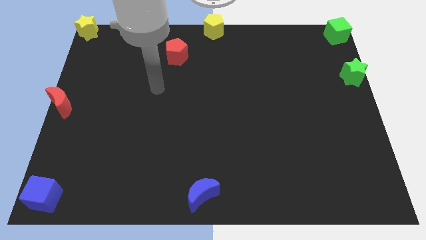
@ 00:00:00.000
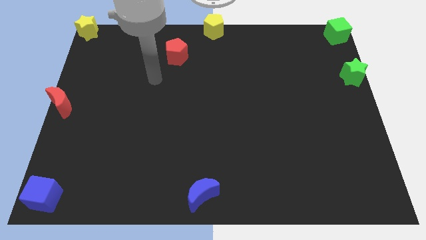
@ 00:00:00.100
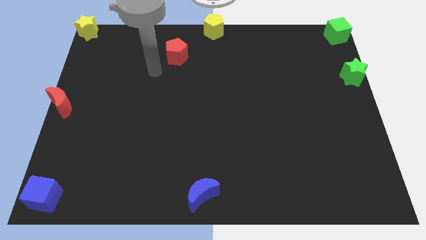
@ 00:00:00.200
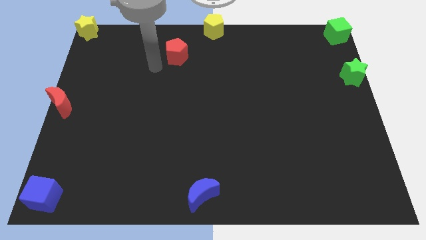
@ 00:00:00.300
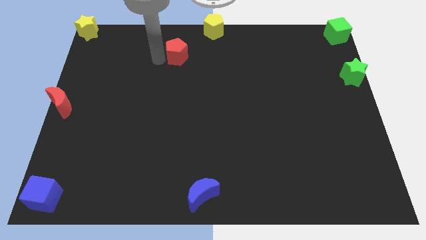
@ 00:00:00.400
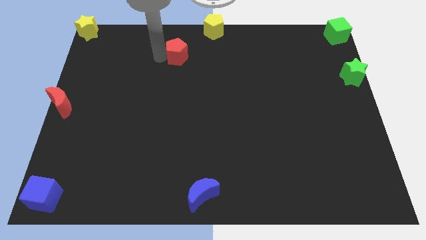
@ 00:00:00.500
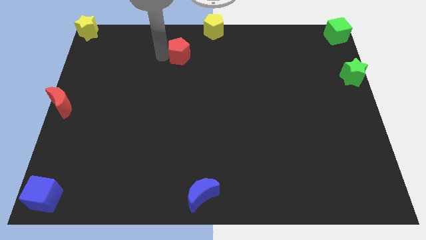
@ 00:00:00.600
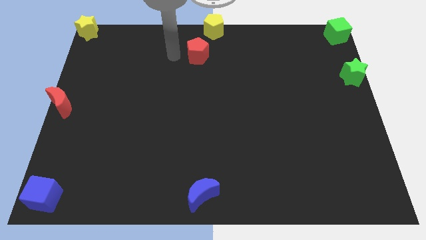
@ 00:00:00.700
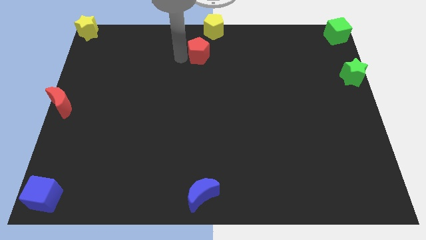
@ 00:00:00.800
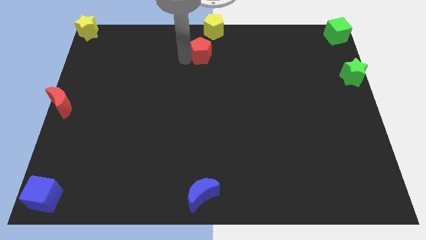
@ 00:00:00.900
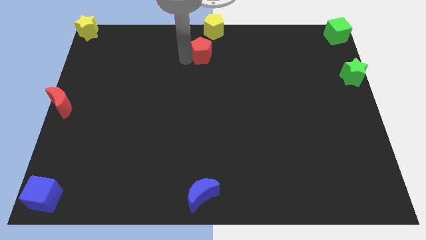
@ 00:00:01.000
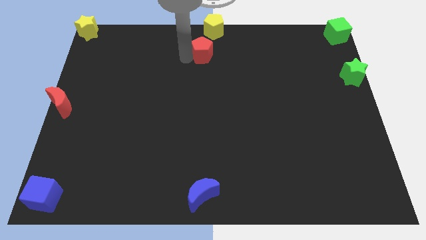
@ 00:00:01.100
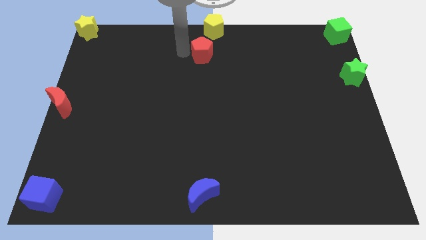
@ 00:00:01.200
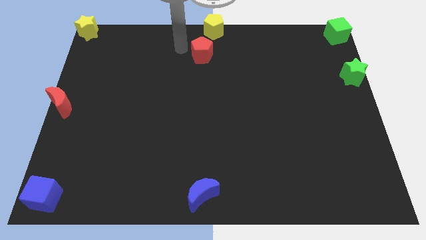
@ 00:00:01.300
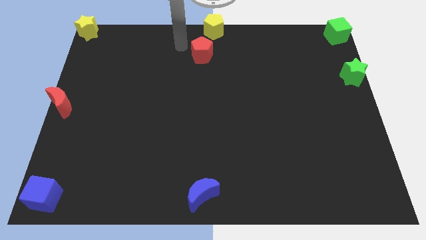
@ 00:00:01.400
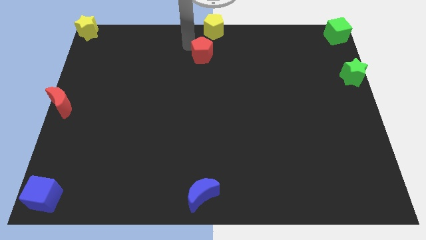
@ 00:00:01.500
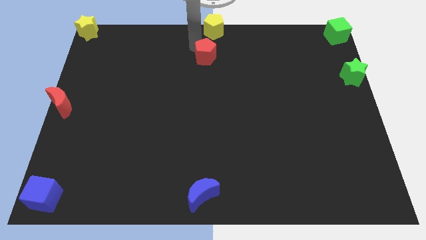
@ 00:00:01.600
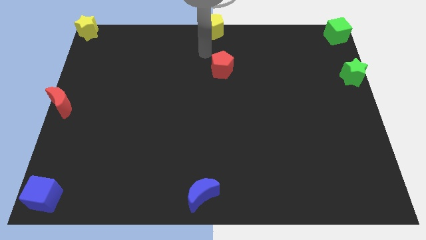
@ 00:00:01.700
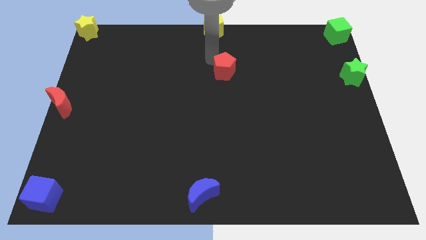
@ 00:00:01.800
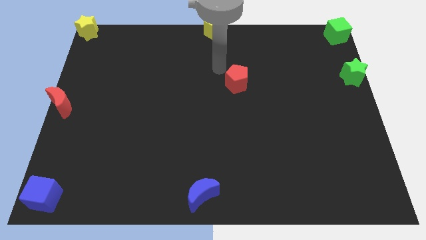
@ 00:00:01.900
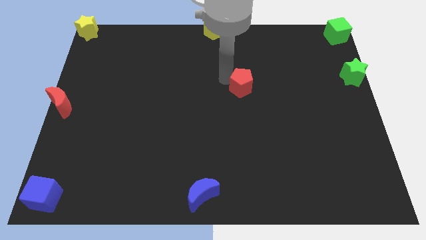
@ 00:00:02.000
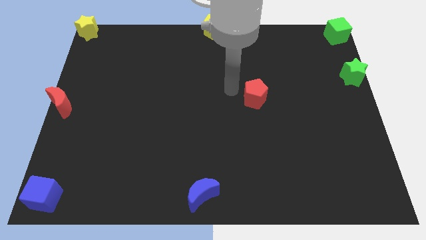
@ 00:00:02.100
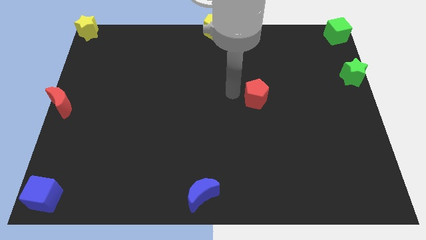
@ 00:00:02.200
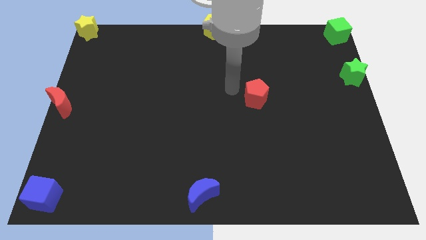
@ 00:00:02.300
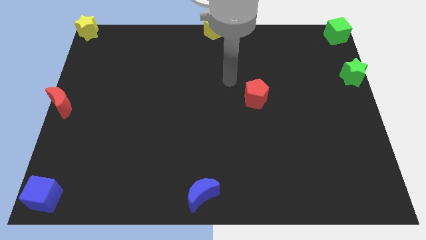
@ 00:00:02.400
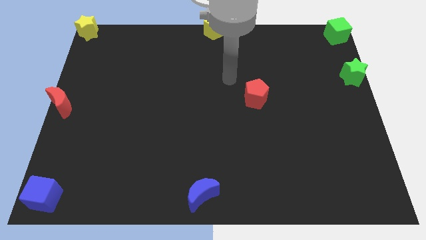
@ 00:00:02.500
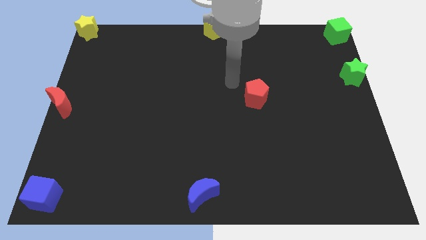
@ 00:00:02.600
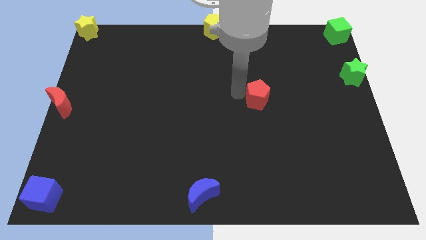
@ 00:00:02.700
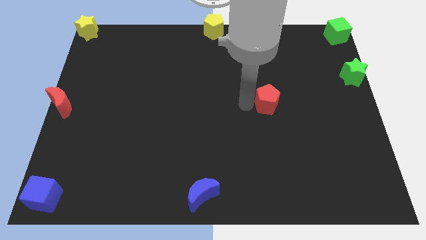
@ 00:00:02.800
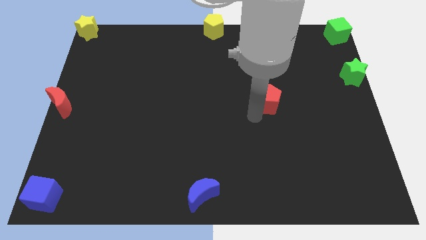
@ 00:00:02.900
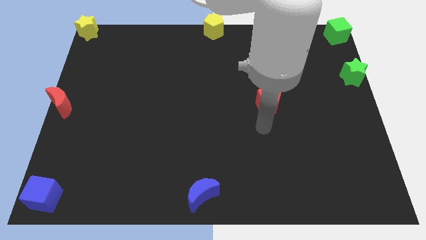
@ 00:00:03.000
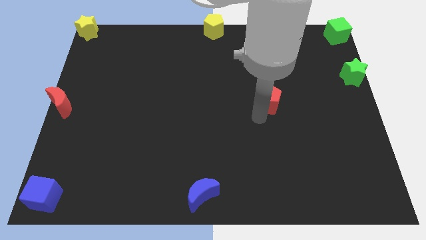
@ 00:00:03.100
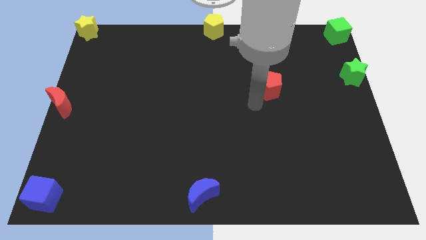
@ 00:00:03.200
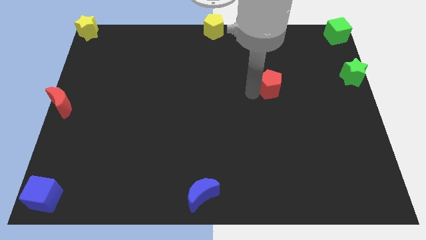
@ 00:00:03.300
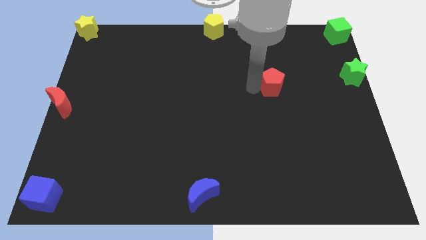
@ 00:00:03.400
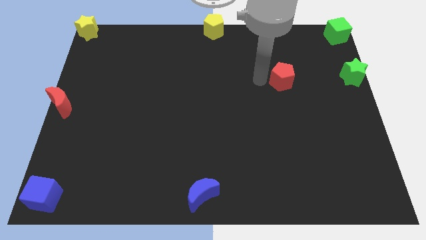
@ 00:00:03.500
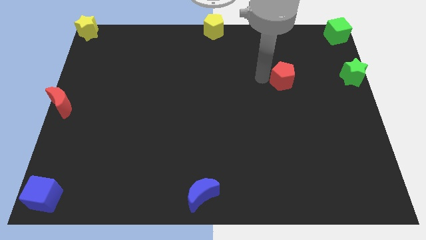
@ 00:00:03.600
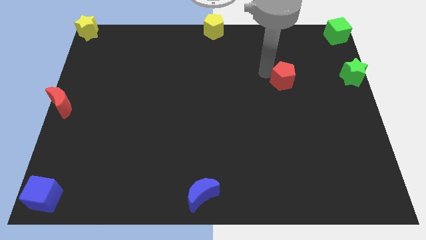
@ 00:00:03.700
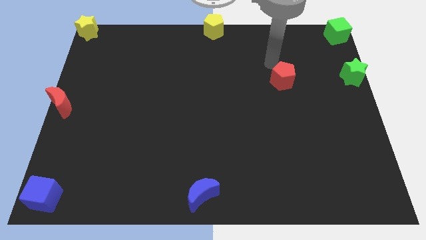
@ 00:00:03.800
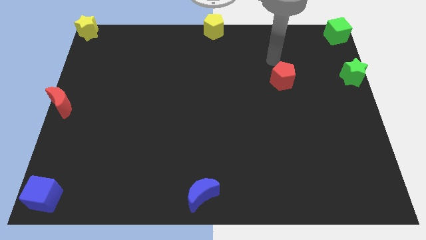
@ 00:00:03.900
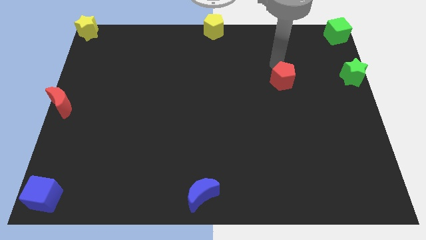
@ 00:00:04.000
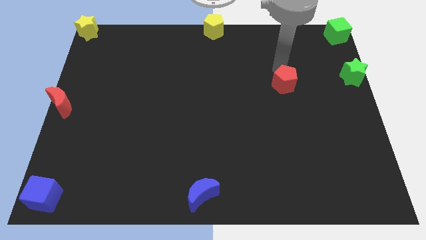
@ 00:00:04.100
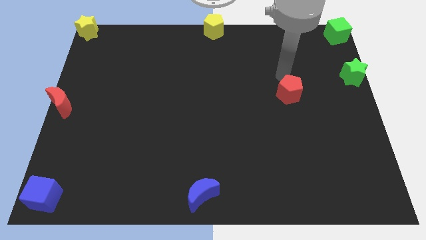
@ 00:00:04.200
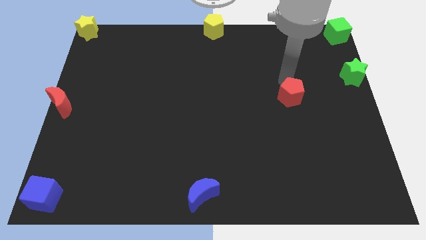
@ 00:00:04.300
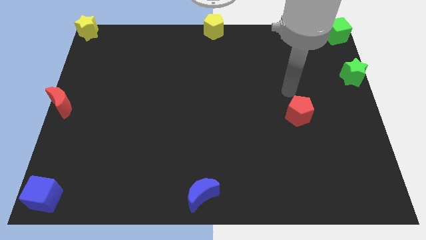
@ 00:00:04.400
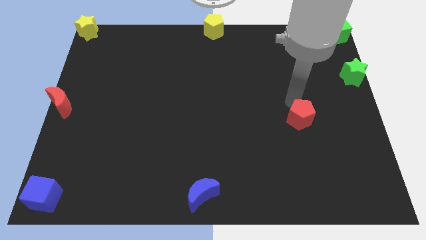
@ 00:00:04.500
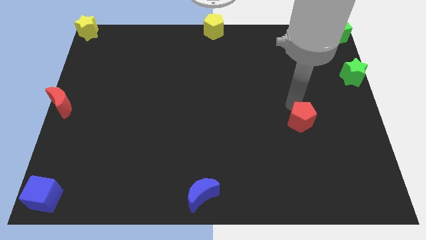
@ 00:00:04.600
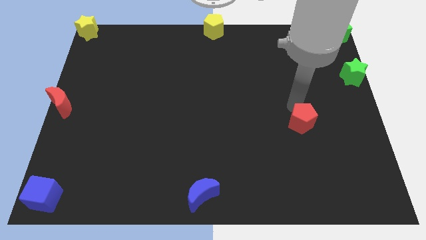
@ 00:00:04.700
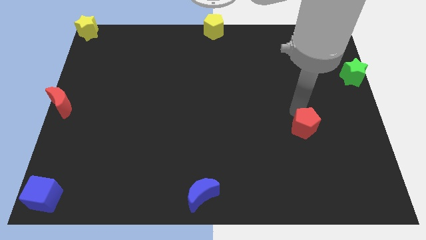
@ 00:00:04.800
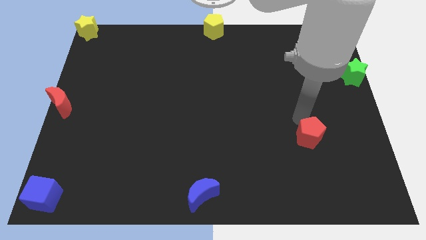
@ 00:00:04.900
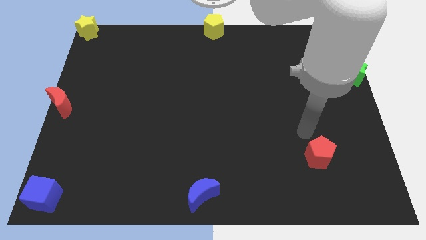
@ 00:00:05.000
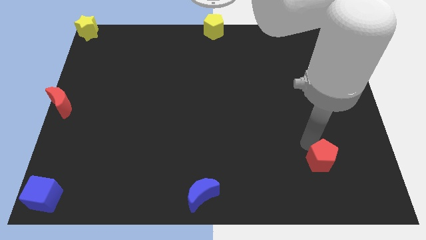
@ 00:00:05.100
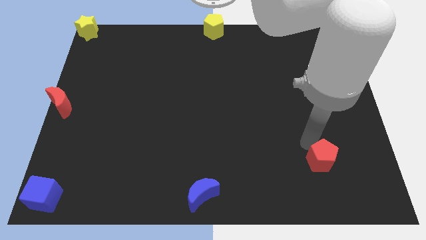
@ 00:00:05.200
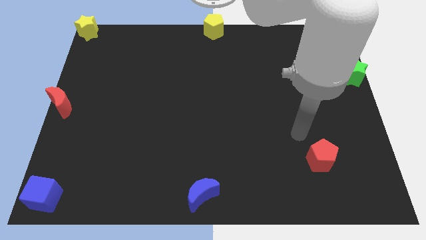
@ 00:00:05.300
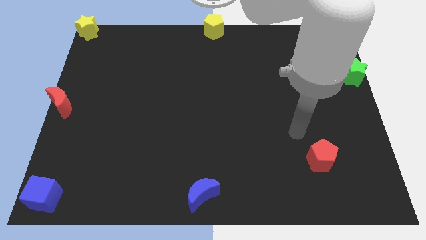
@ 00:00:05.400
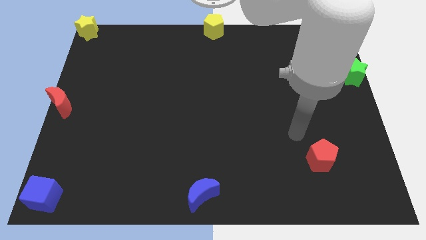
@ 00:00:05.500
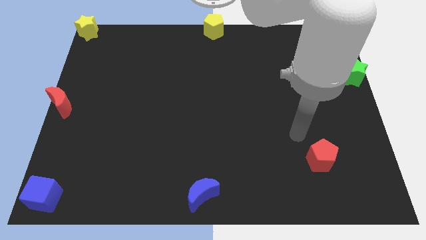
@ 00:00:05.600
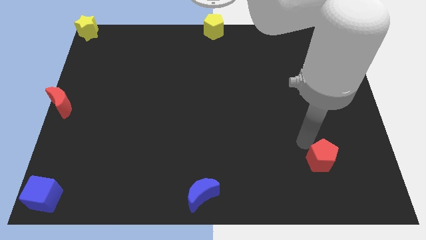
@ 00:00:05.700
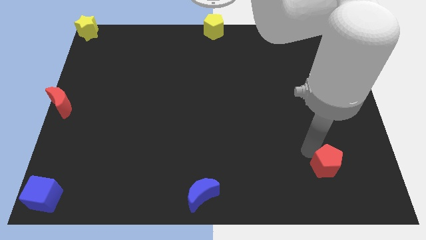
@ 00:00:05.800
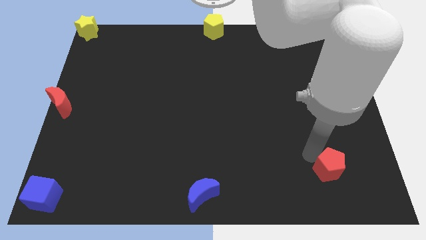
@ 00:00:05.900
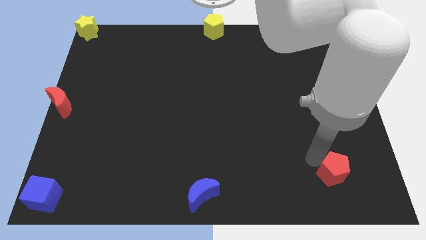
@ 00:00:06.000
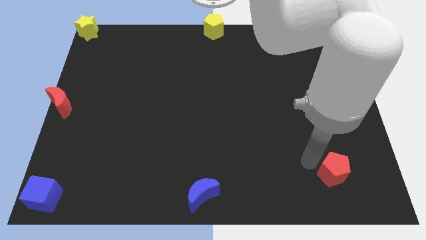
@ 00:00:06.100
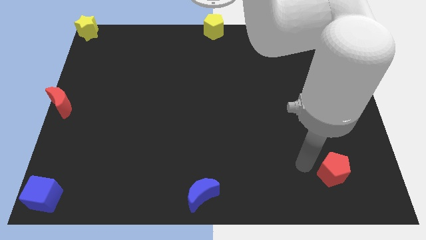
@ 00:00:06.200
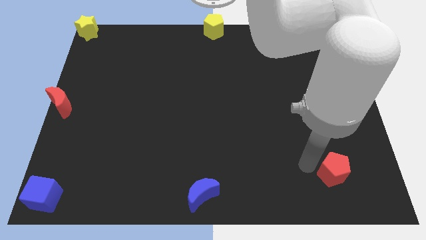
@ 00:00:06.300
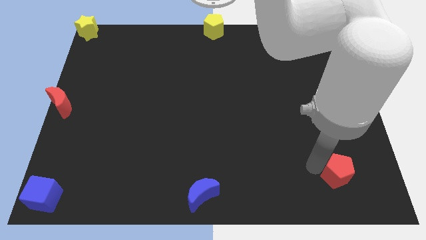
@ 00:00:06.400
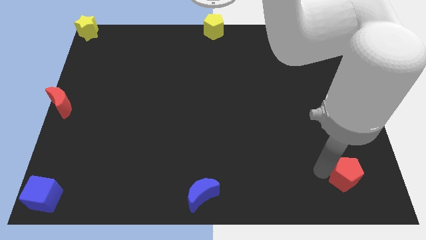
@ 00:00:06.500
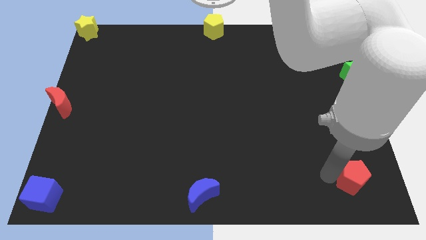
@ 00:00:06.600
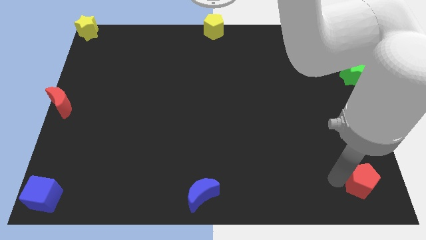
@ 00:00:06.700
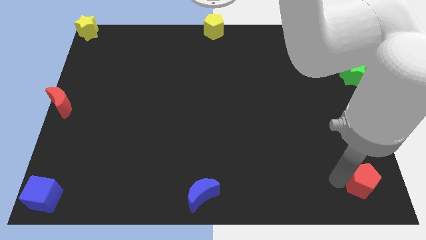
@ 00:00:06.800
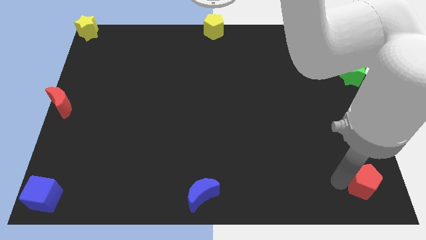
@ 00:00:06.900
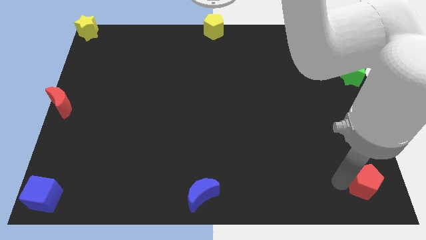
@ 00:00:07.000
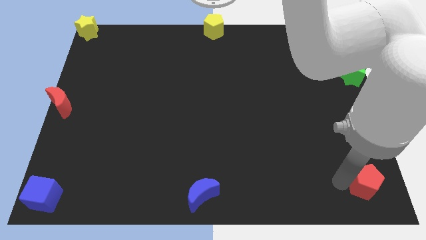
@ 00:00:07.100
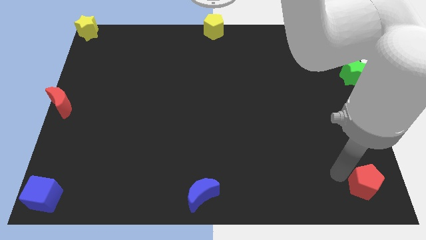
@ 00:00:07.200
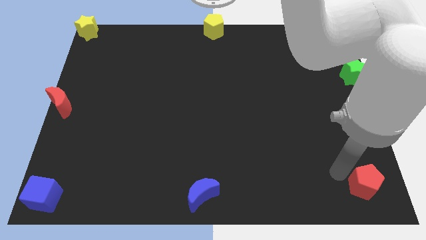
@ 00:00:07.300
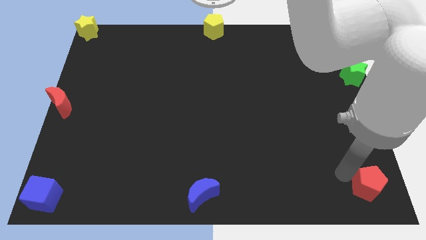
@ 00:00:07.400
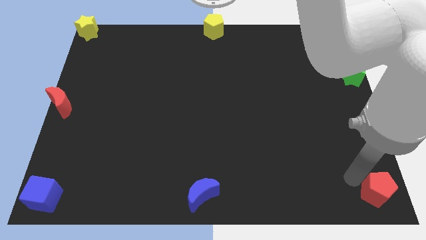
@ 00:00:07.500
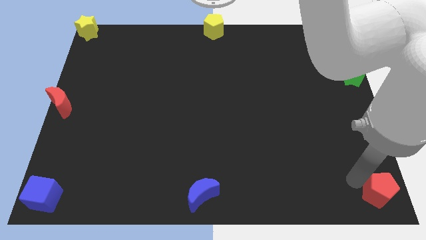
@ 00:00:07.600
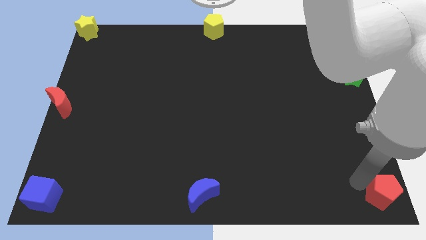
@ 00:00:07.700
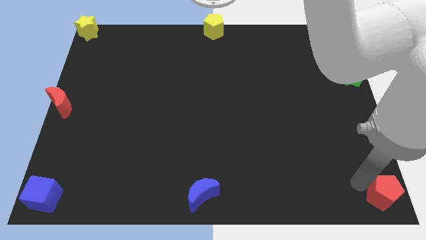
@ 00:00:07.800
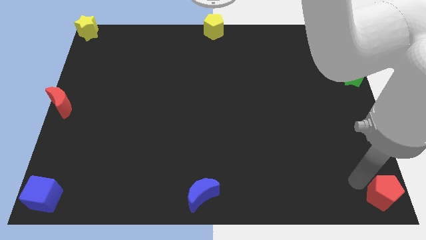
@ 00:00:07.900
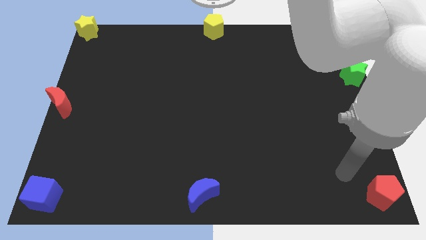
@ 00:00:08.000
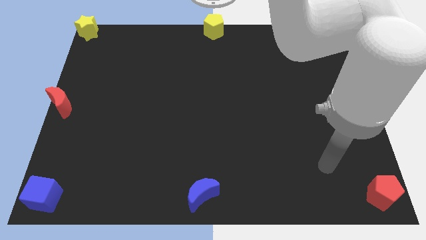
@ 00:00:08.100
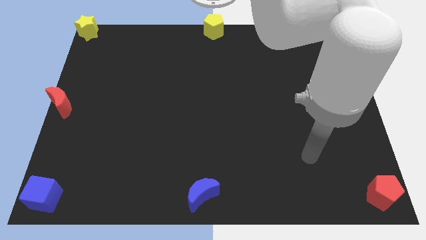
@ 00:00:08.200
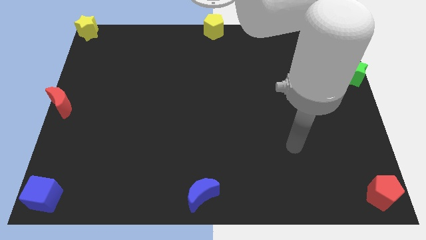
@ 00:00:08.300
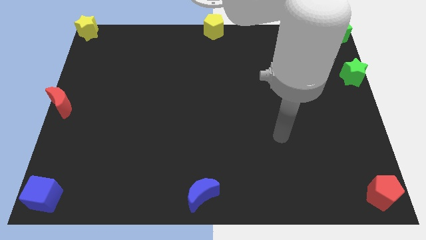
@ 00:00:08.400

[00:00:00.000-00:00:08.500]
move the red pentagon to the bottom right corner of the board

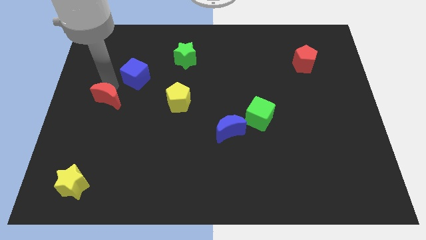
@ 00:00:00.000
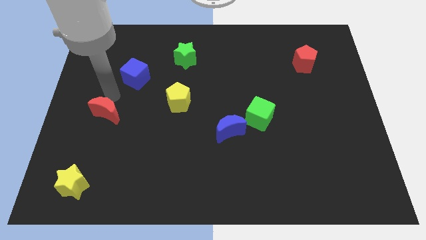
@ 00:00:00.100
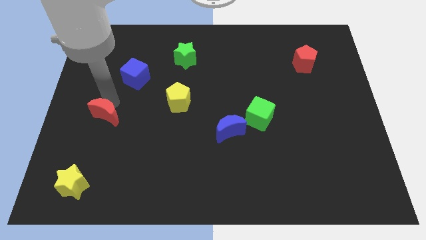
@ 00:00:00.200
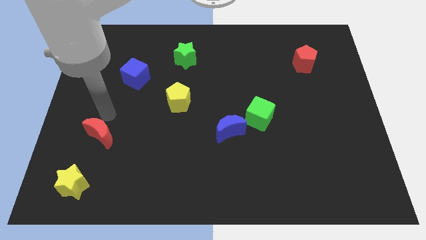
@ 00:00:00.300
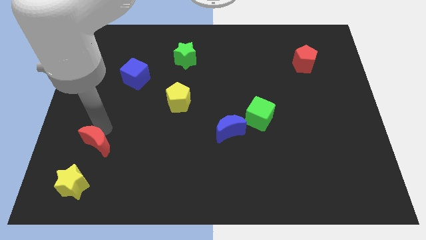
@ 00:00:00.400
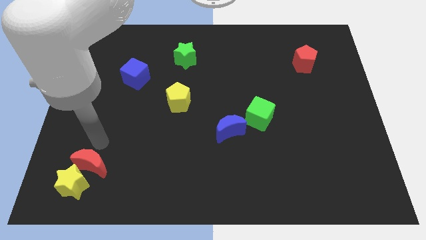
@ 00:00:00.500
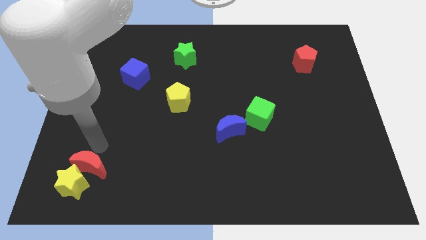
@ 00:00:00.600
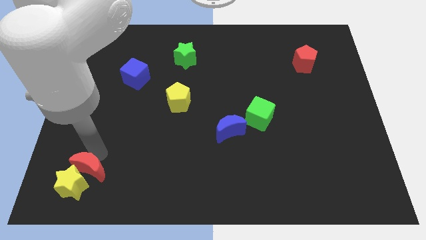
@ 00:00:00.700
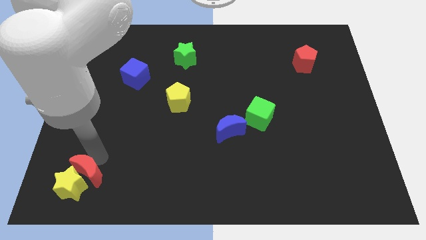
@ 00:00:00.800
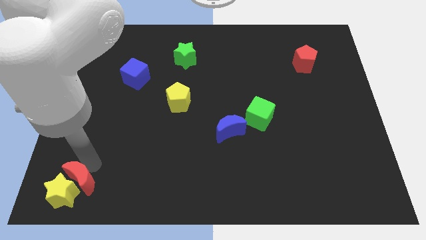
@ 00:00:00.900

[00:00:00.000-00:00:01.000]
push the red crescent into yellow star
